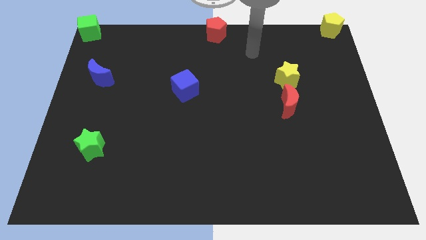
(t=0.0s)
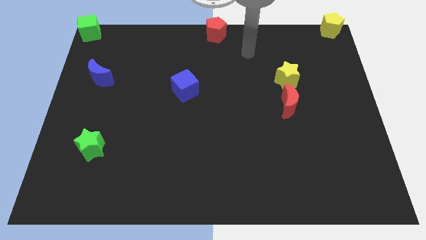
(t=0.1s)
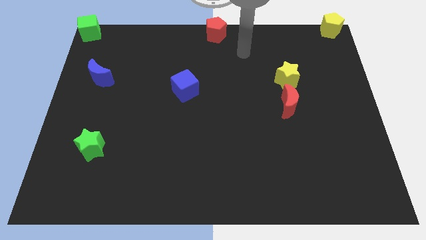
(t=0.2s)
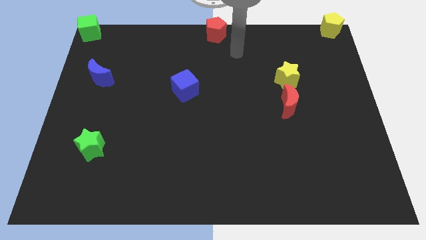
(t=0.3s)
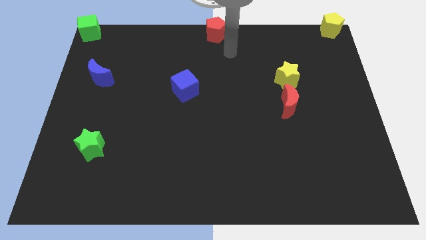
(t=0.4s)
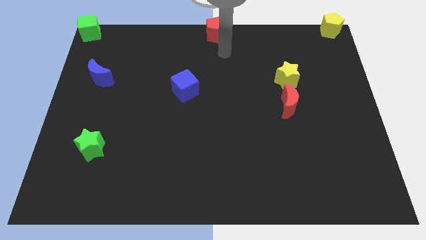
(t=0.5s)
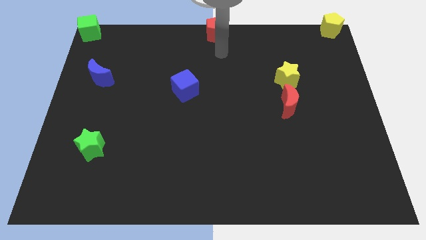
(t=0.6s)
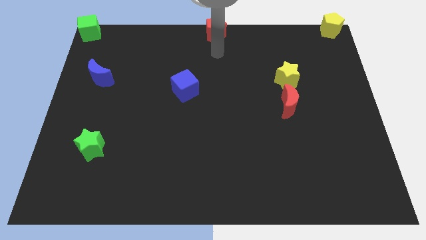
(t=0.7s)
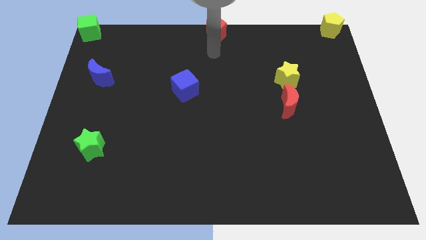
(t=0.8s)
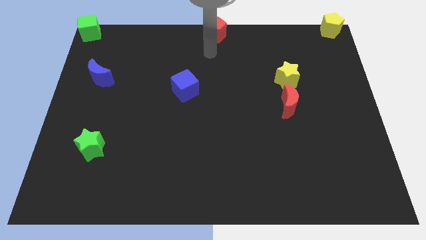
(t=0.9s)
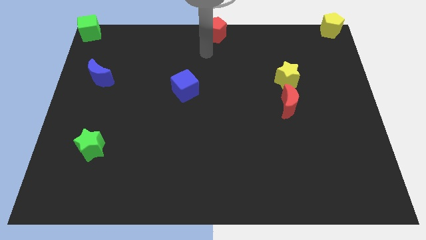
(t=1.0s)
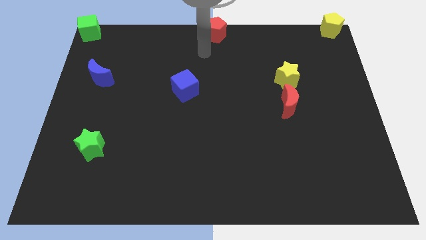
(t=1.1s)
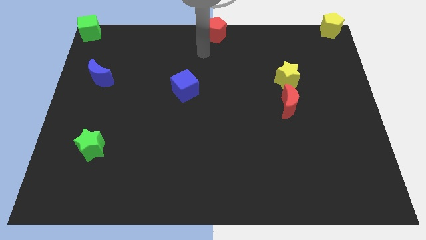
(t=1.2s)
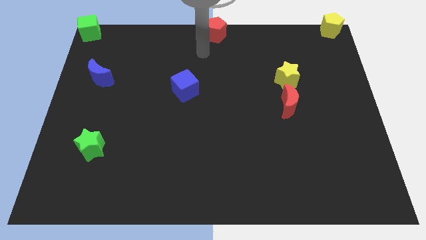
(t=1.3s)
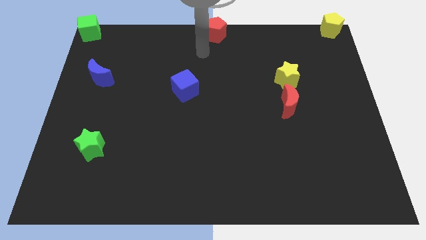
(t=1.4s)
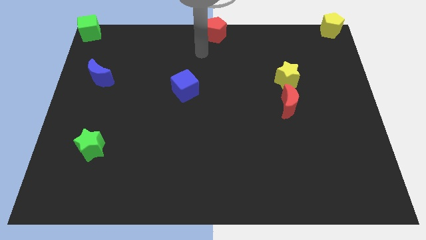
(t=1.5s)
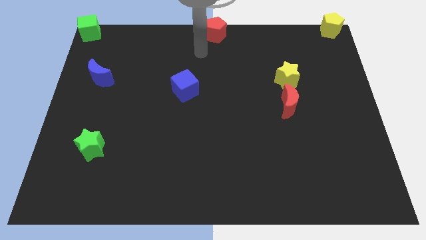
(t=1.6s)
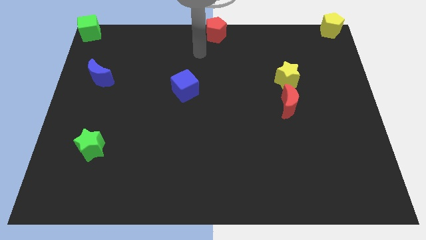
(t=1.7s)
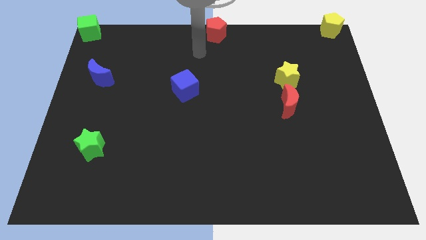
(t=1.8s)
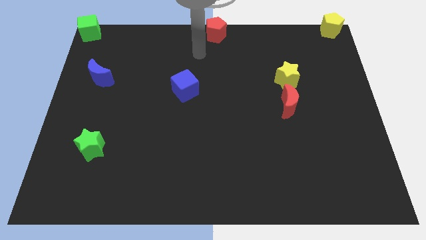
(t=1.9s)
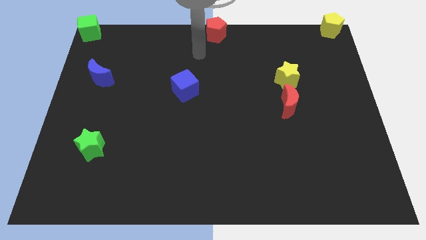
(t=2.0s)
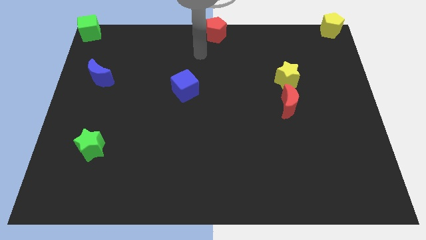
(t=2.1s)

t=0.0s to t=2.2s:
move the arm in between the blue cube and red pentagon

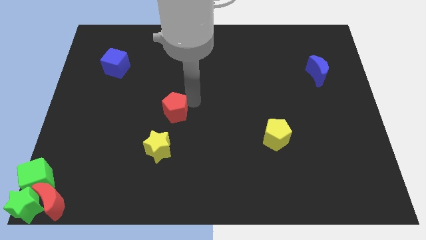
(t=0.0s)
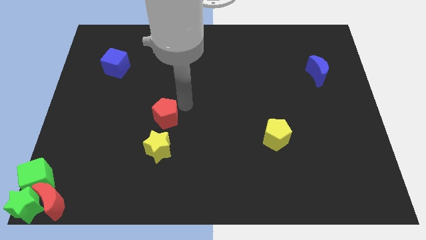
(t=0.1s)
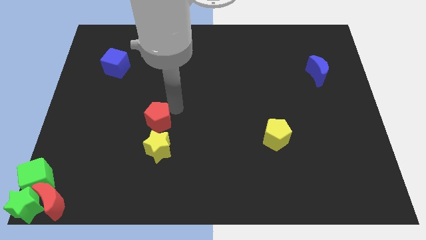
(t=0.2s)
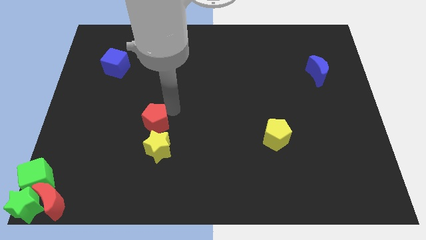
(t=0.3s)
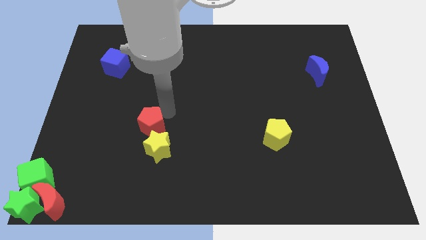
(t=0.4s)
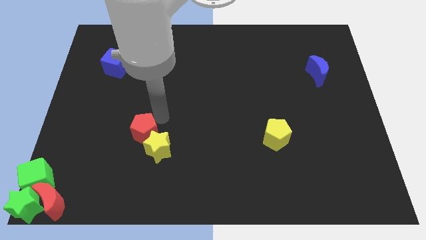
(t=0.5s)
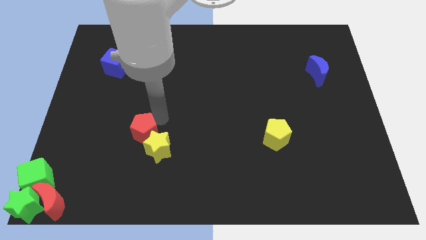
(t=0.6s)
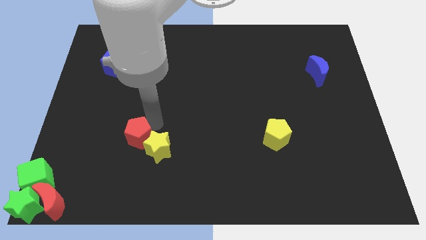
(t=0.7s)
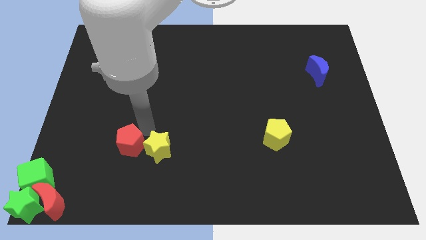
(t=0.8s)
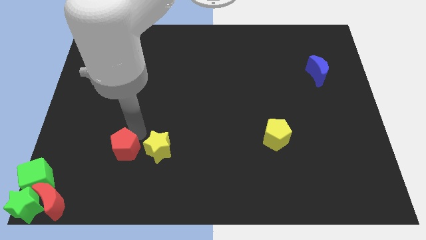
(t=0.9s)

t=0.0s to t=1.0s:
push the red pentagon to the left of the yellow star

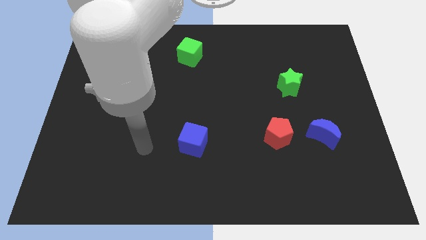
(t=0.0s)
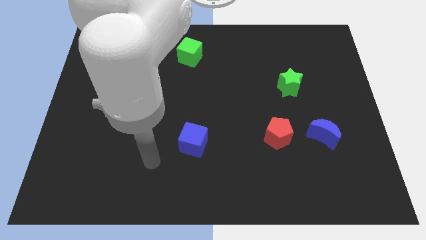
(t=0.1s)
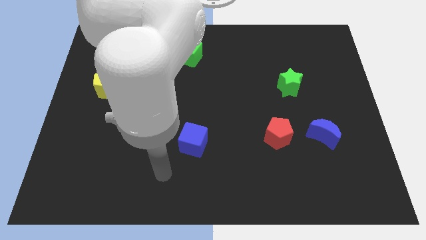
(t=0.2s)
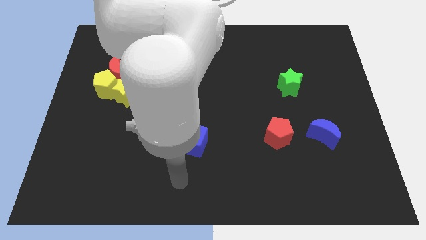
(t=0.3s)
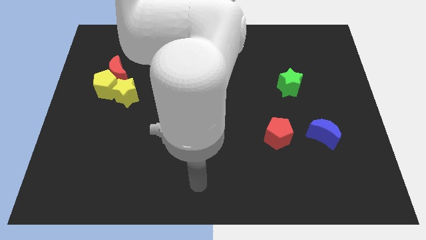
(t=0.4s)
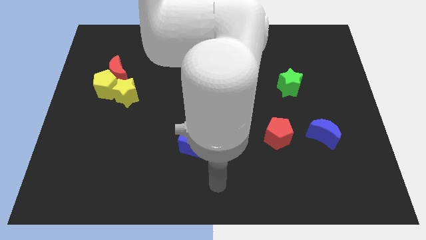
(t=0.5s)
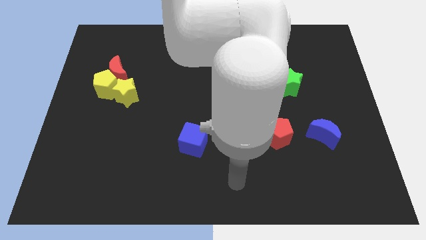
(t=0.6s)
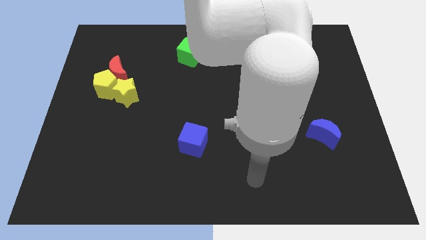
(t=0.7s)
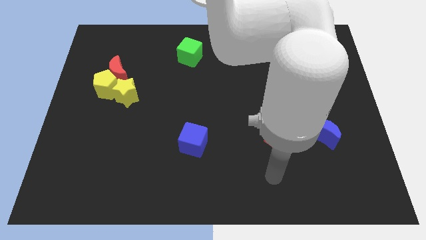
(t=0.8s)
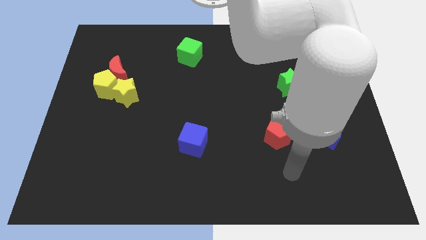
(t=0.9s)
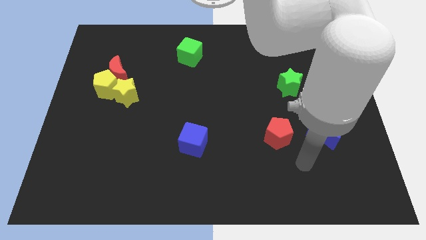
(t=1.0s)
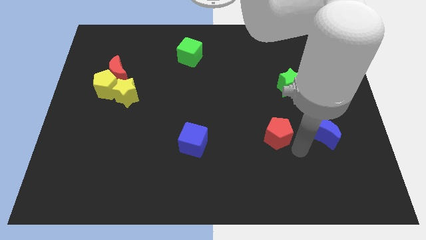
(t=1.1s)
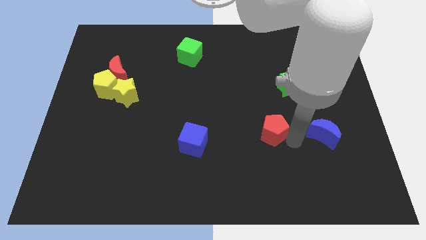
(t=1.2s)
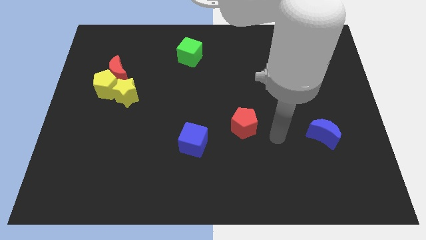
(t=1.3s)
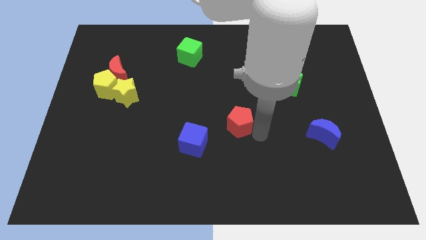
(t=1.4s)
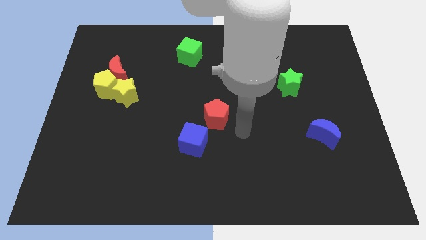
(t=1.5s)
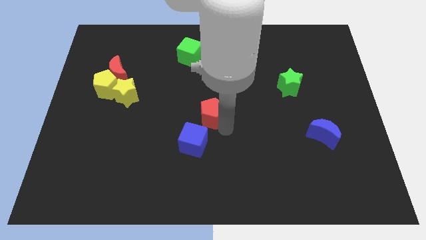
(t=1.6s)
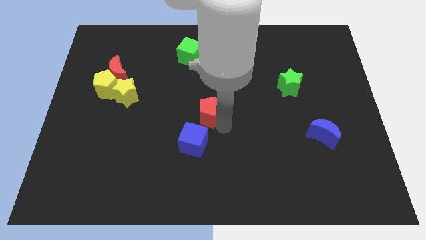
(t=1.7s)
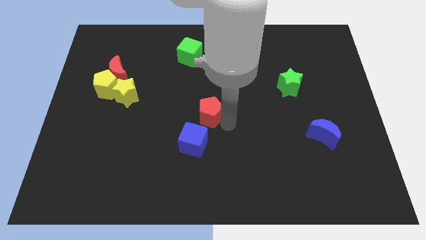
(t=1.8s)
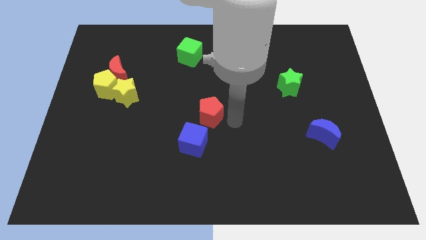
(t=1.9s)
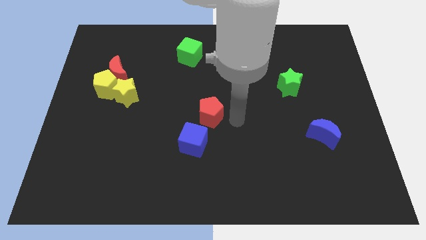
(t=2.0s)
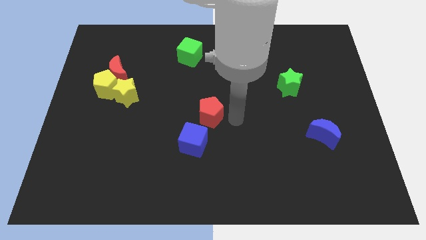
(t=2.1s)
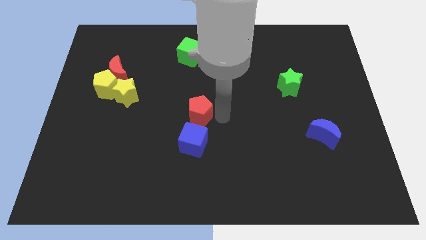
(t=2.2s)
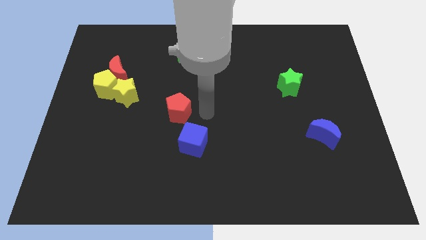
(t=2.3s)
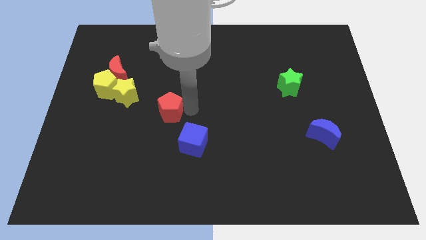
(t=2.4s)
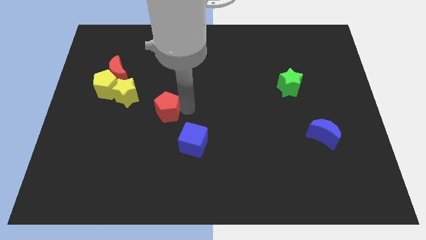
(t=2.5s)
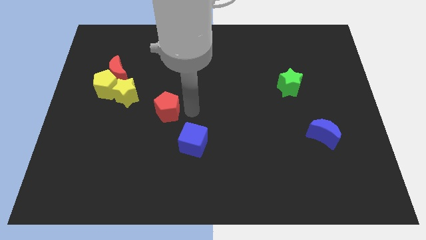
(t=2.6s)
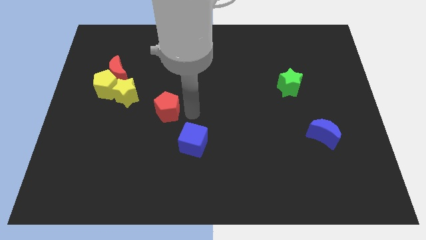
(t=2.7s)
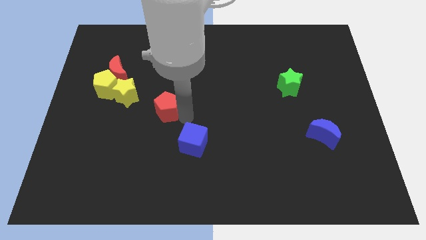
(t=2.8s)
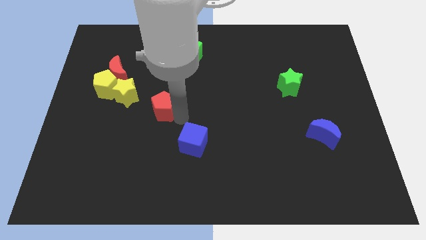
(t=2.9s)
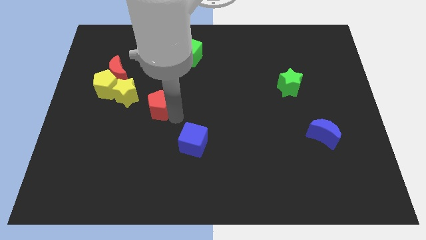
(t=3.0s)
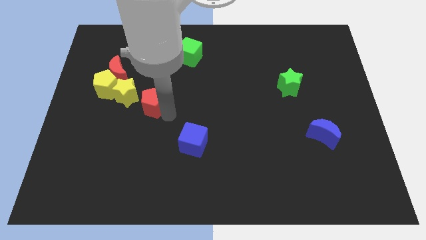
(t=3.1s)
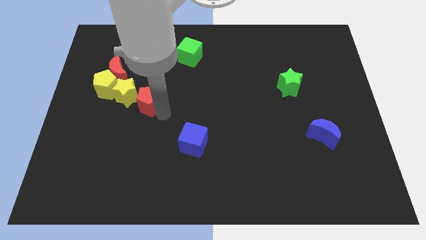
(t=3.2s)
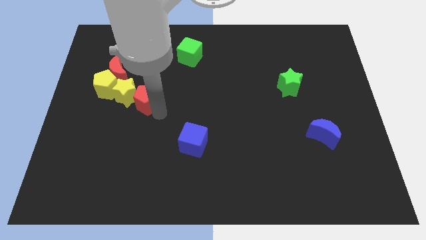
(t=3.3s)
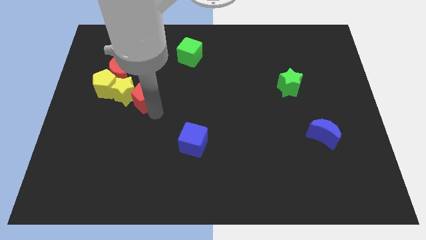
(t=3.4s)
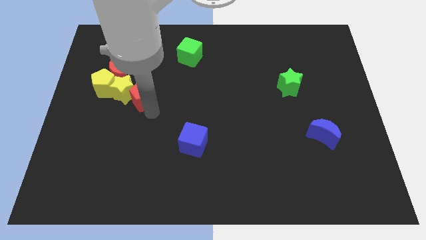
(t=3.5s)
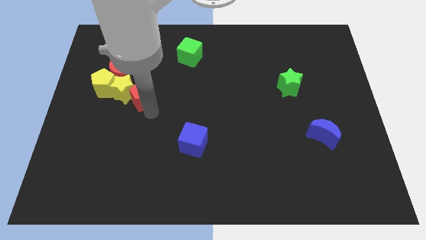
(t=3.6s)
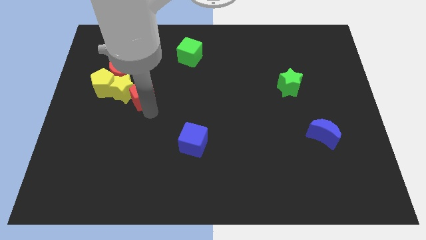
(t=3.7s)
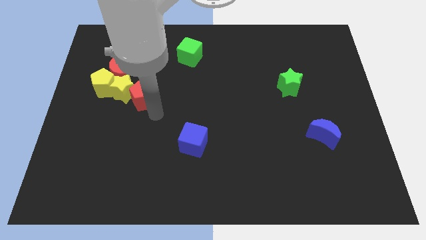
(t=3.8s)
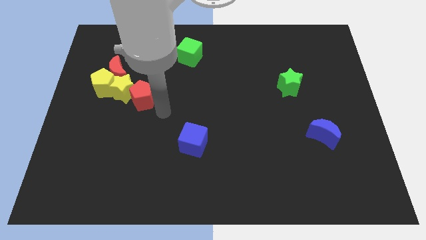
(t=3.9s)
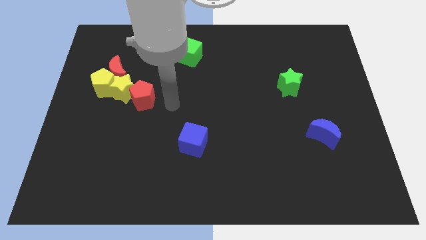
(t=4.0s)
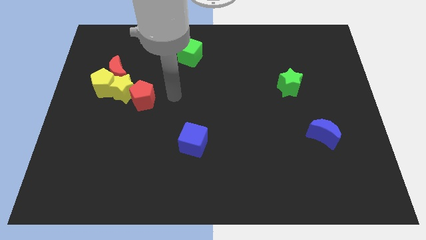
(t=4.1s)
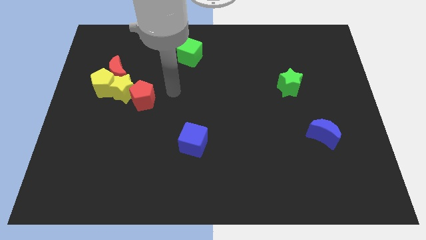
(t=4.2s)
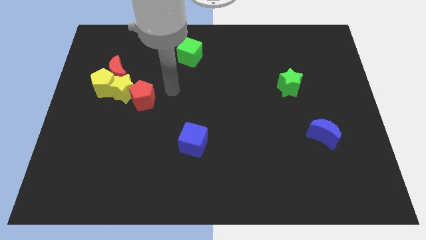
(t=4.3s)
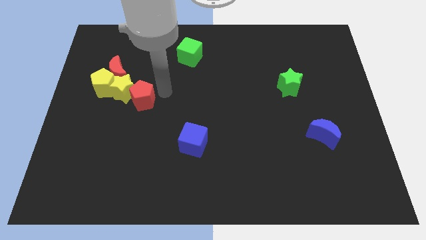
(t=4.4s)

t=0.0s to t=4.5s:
push the red pentagon to the right side of the yellow star

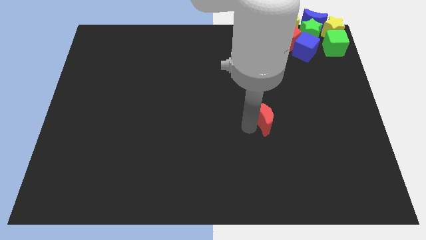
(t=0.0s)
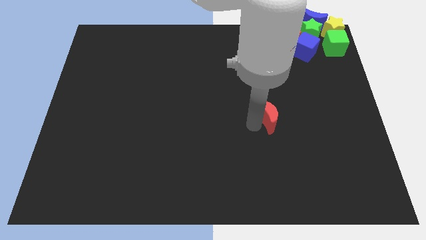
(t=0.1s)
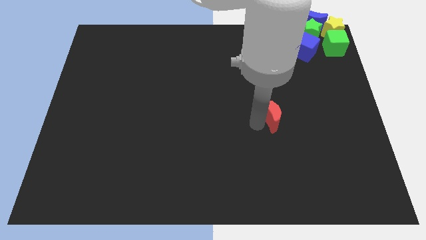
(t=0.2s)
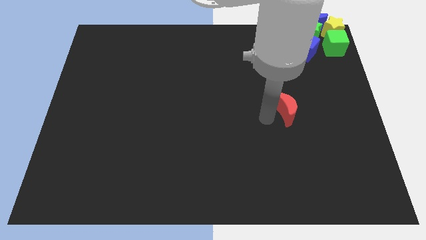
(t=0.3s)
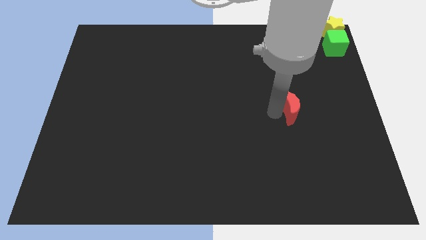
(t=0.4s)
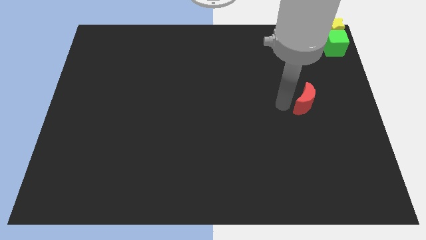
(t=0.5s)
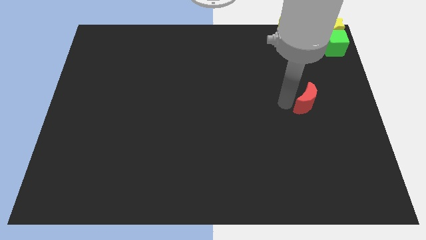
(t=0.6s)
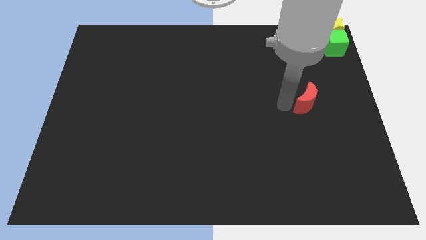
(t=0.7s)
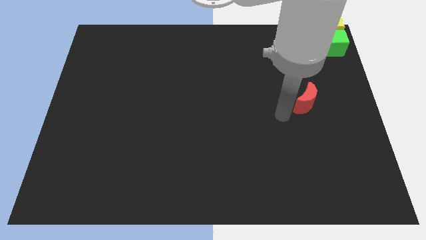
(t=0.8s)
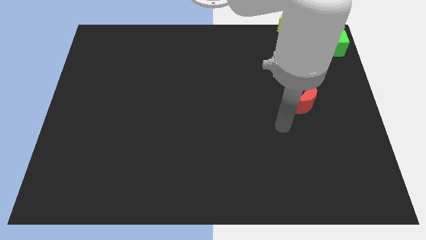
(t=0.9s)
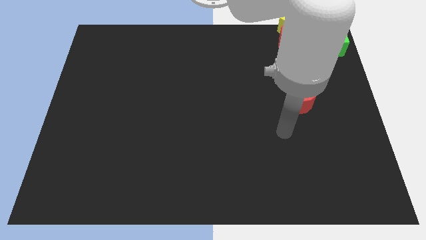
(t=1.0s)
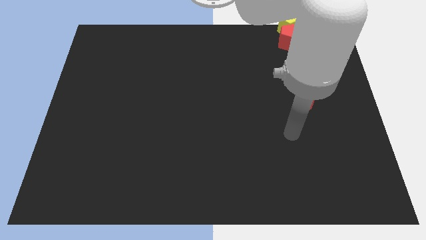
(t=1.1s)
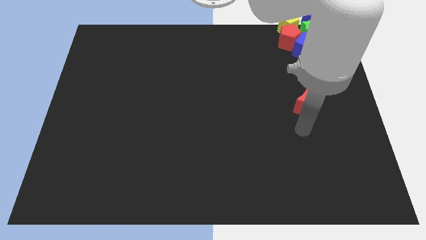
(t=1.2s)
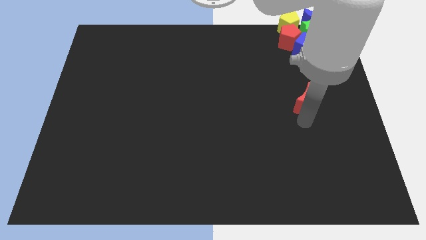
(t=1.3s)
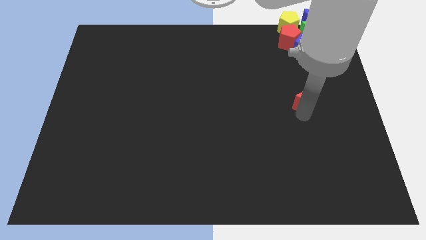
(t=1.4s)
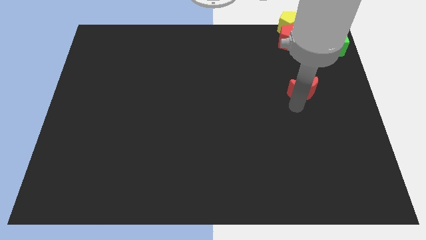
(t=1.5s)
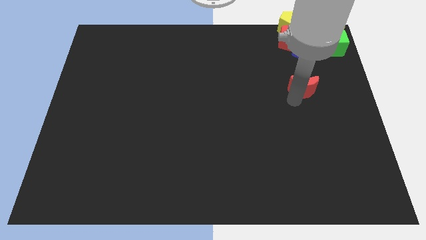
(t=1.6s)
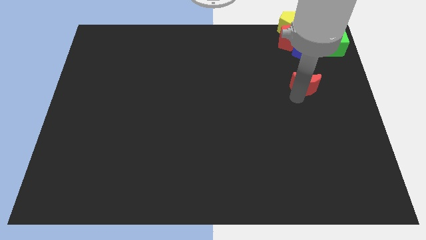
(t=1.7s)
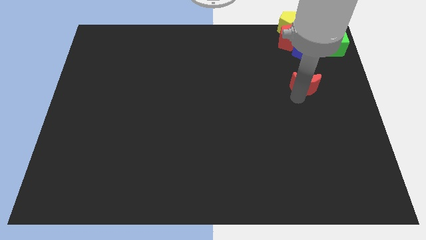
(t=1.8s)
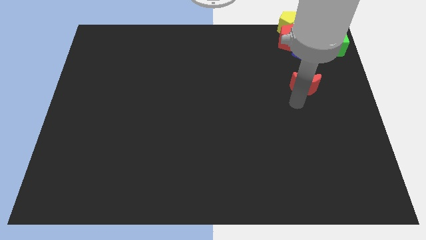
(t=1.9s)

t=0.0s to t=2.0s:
put the red moon at the bottom of blue cube
